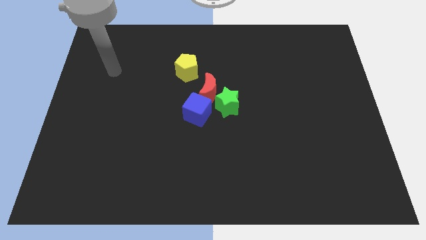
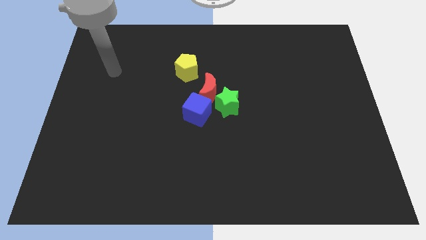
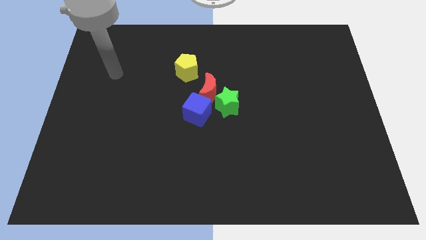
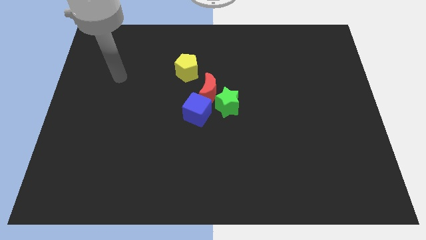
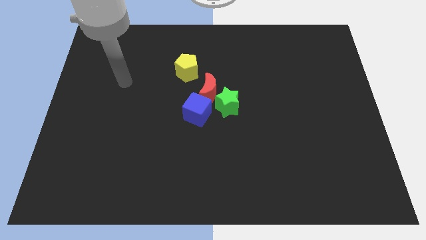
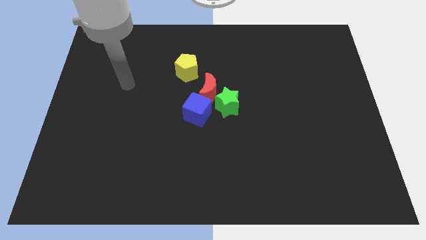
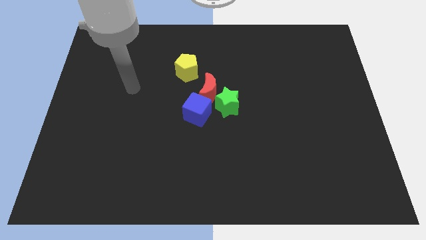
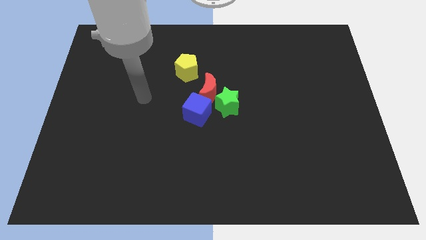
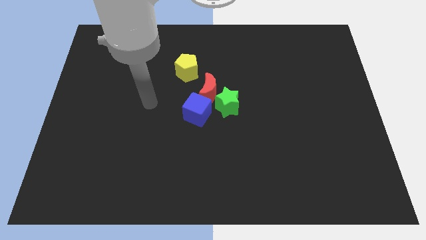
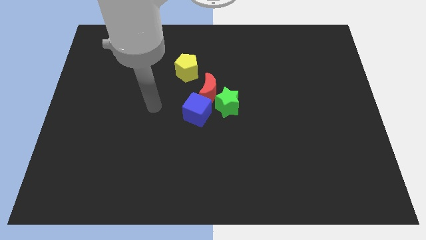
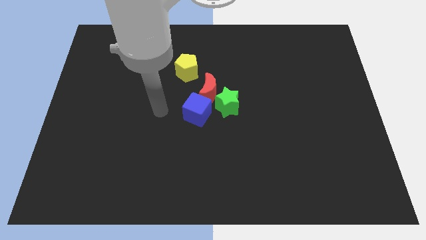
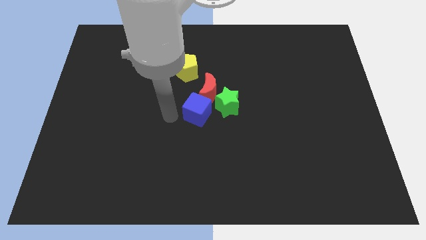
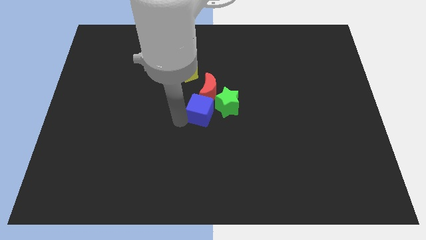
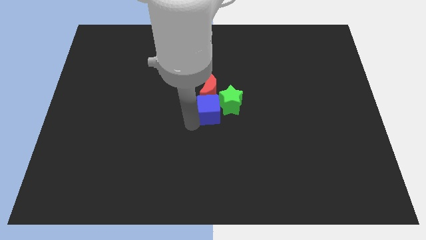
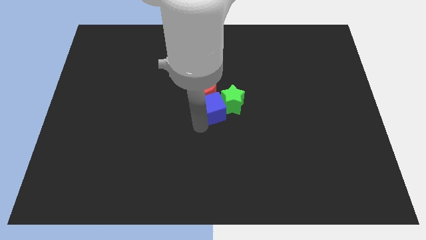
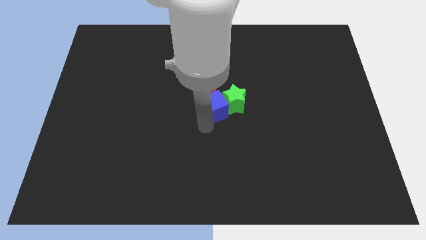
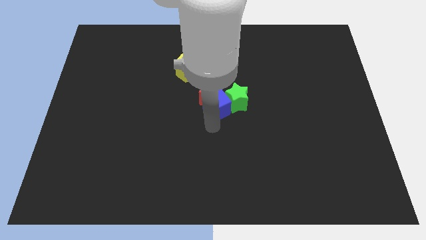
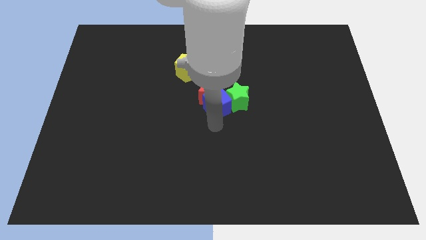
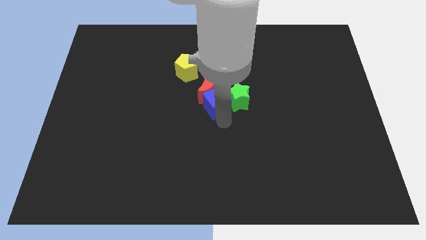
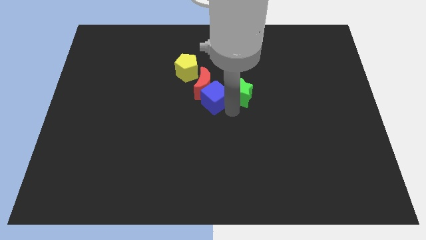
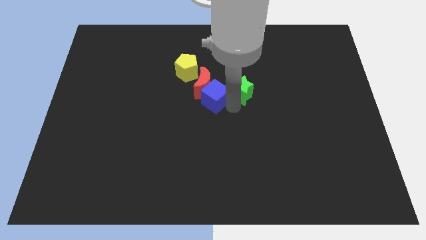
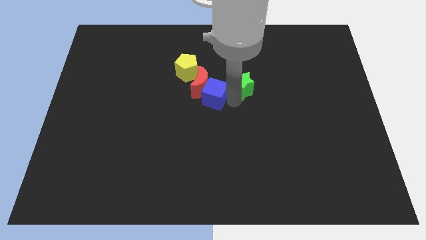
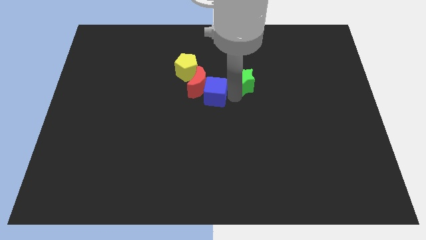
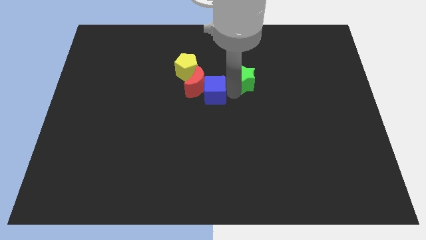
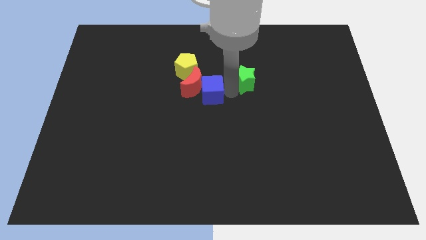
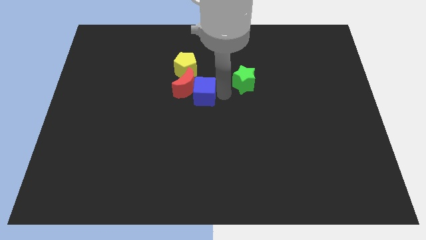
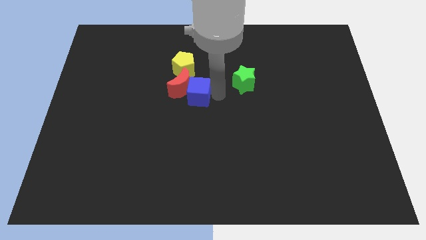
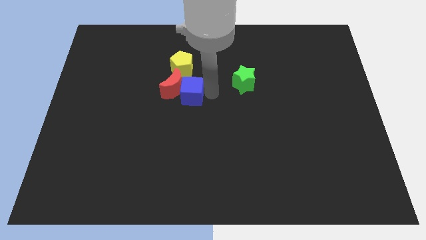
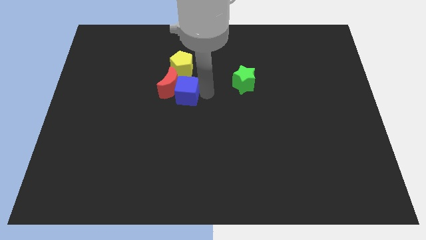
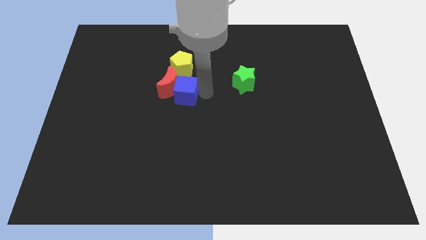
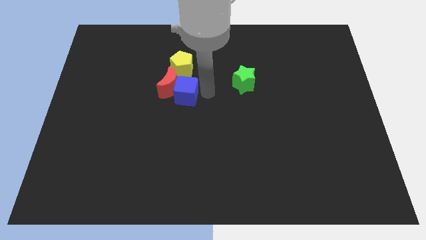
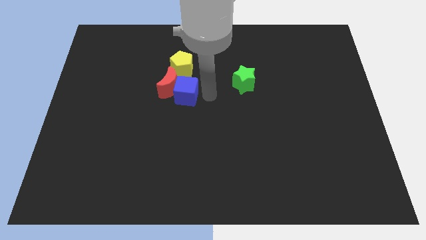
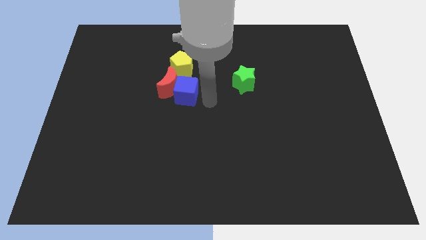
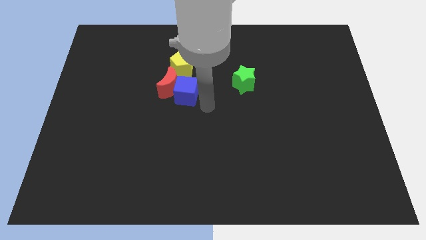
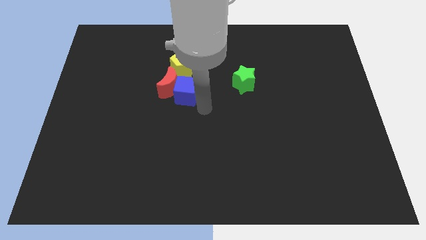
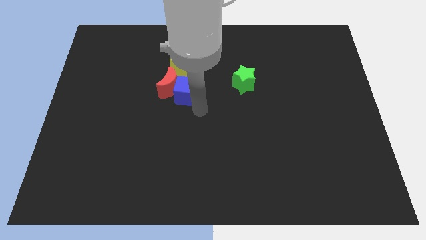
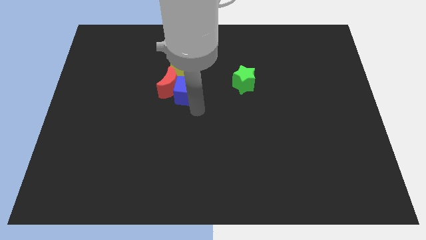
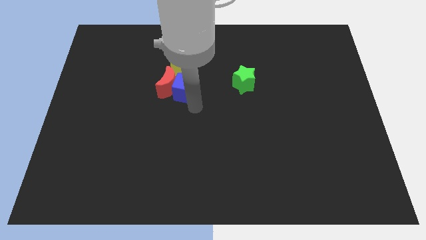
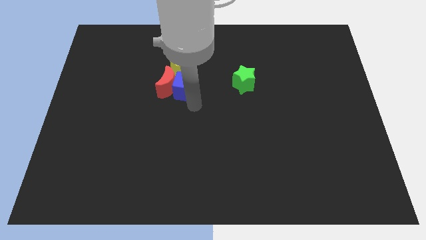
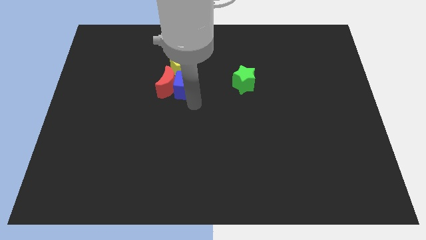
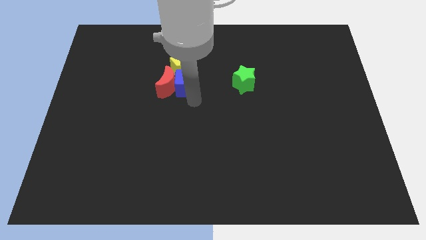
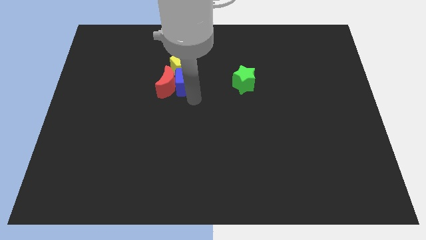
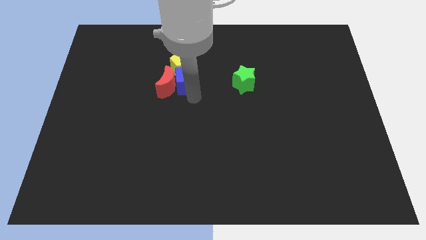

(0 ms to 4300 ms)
put the blue cube next to the pentagon

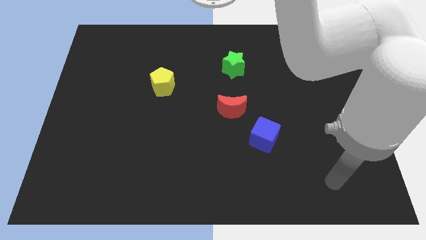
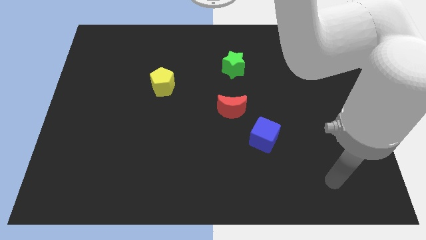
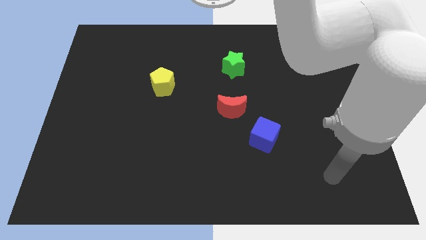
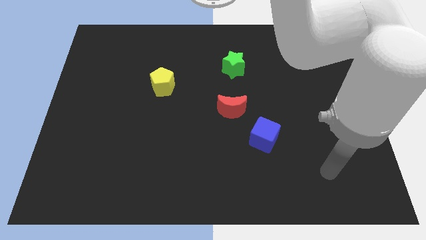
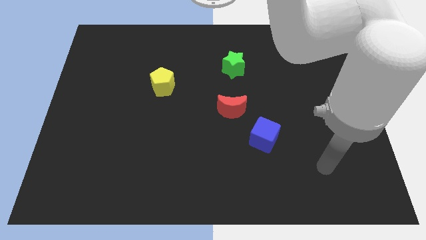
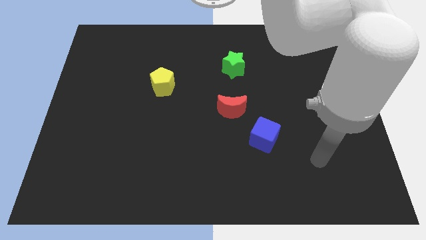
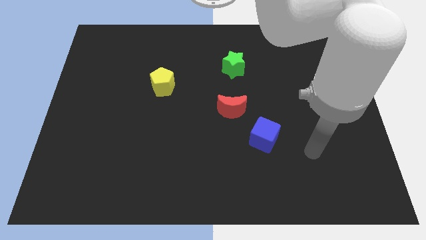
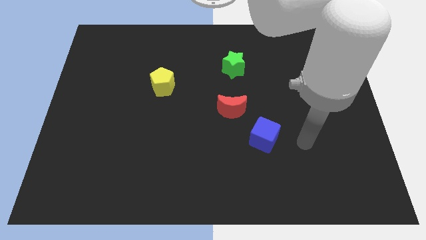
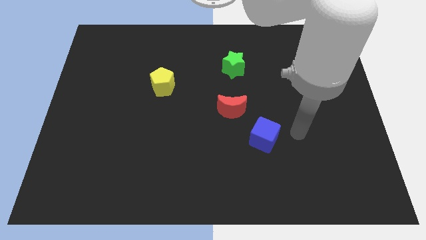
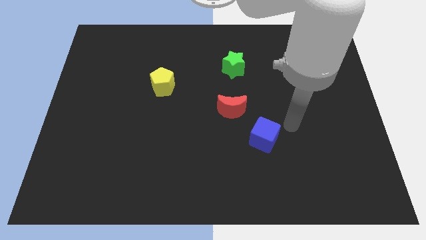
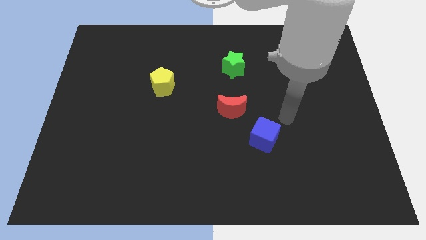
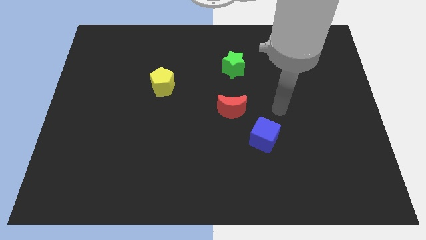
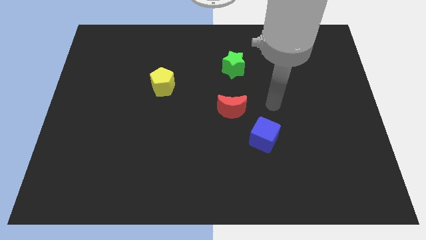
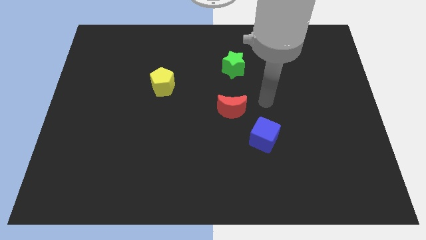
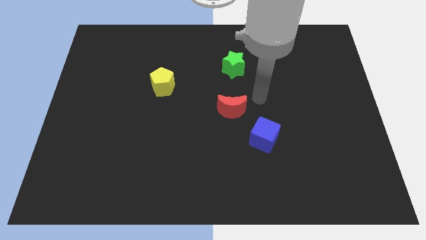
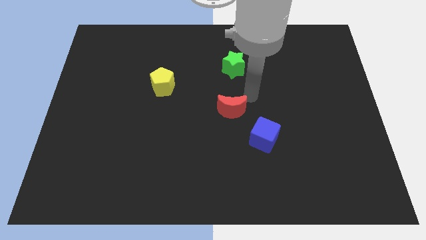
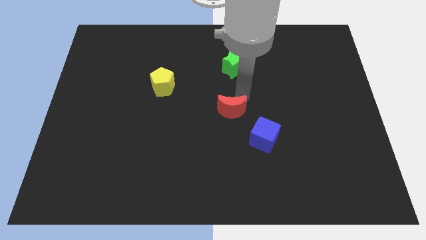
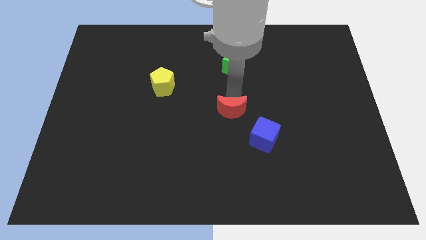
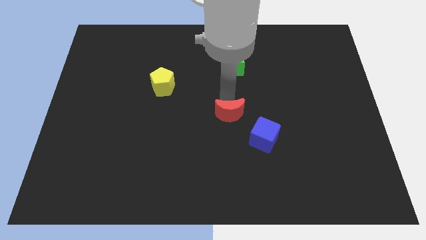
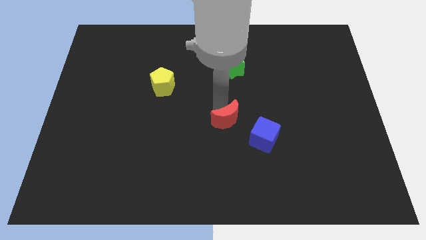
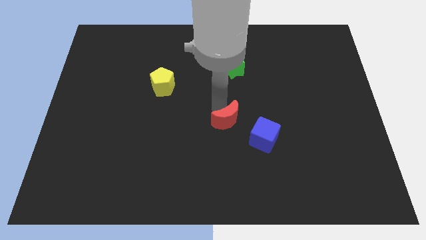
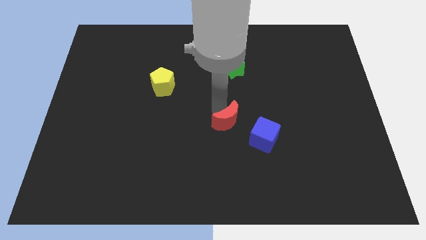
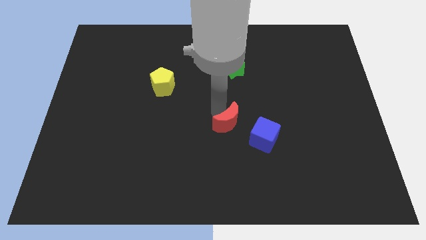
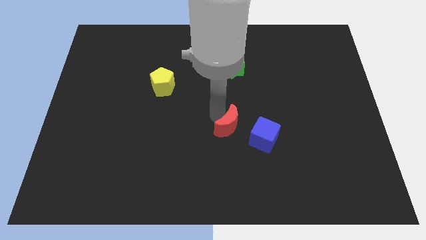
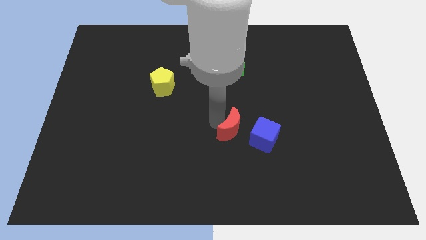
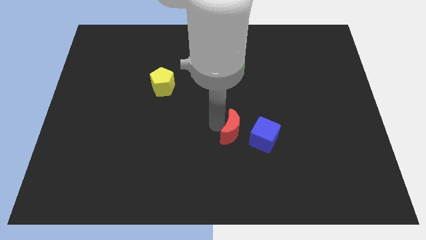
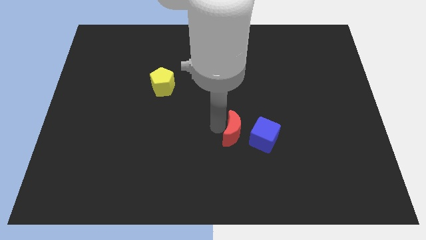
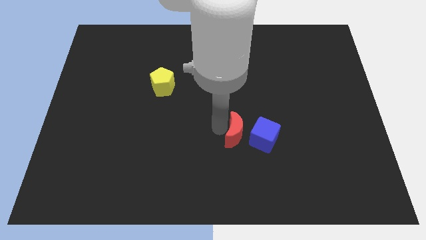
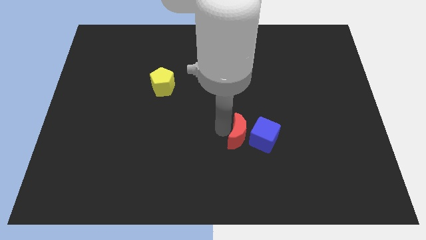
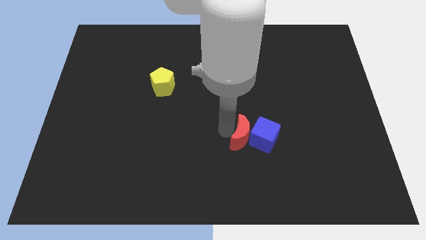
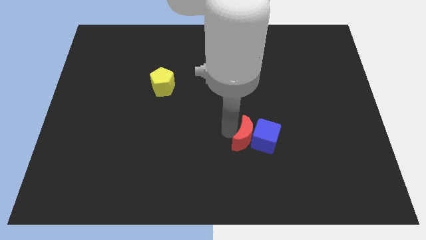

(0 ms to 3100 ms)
slide the red moon next to the blue block

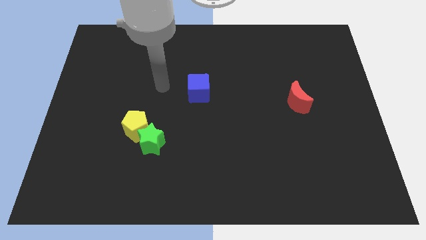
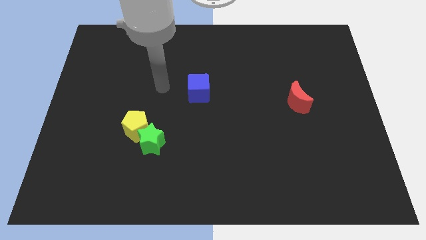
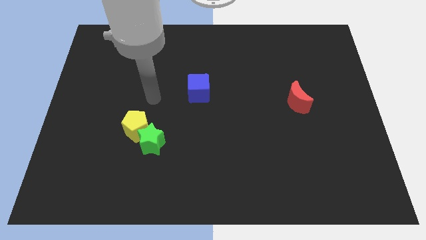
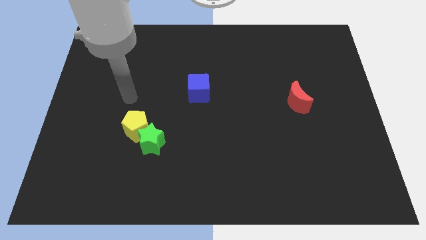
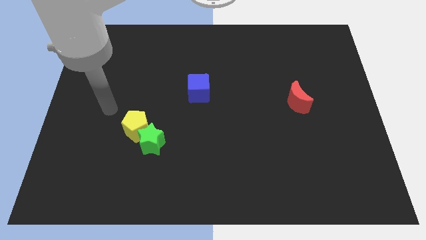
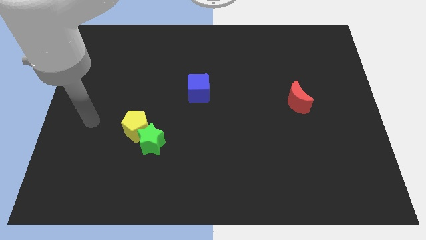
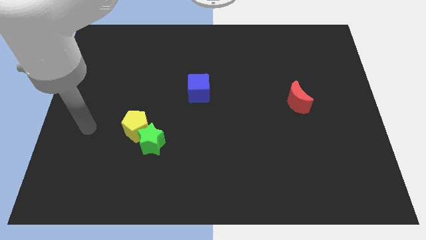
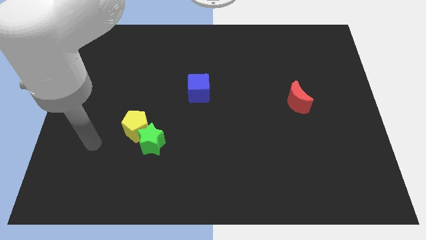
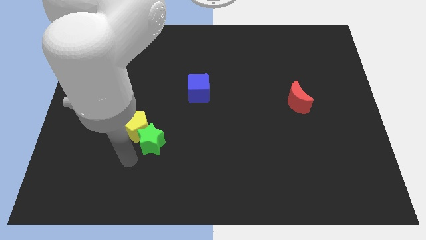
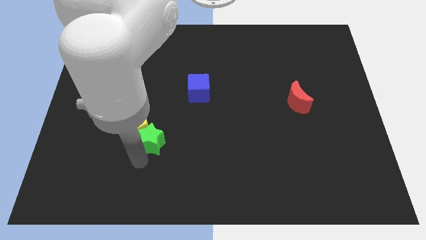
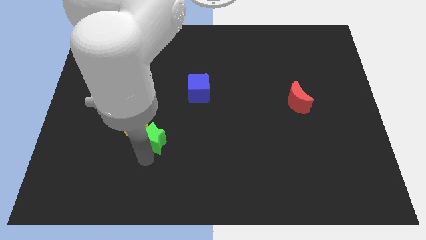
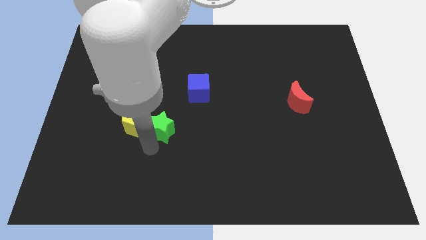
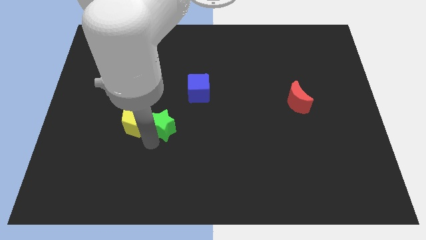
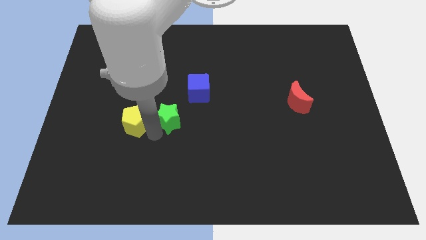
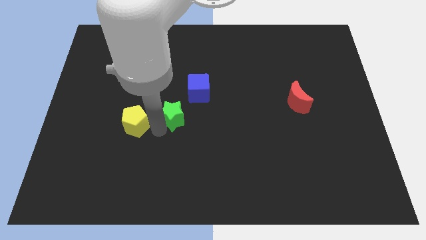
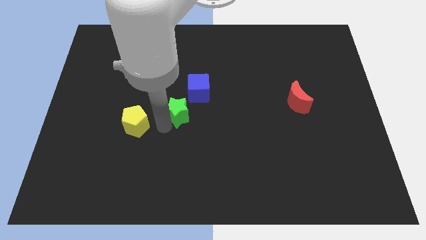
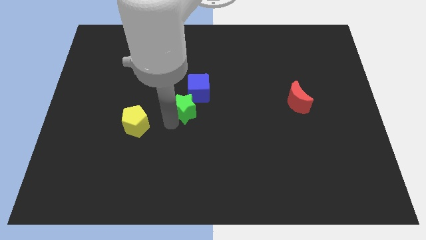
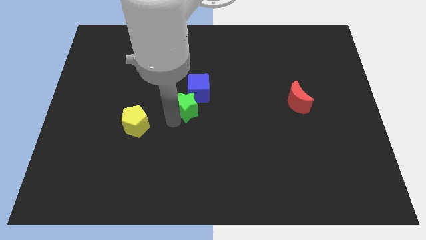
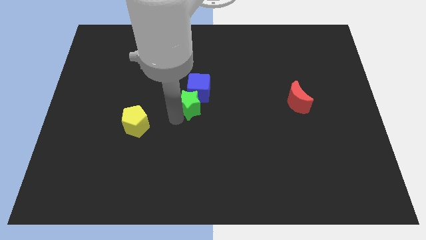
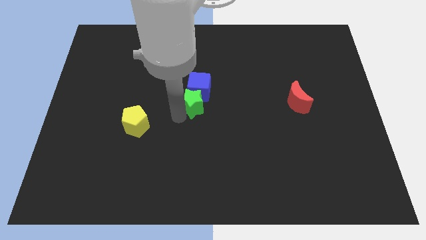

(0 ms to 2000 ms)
move the star next to the blue cube
